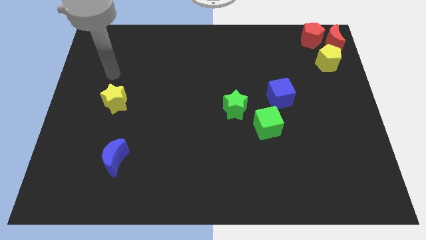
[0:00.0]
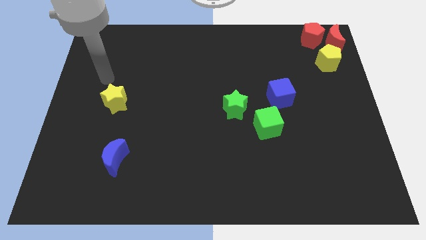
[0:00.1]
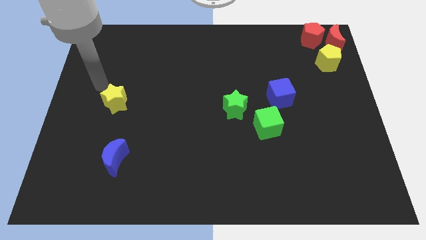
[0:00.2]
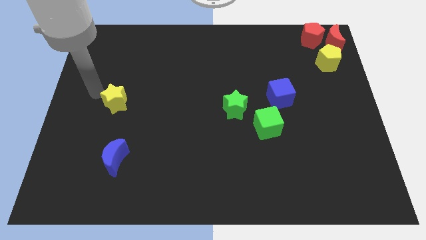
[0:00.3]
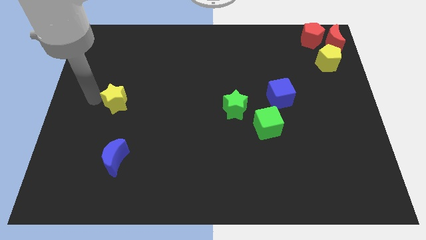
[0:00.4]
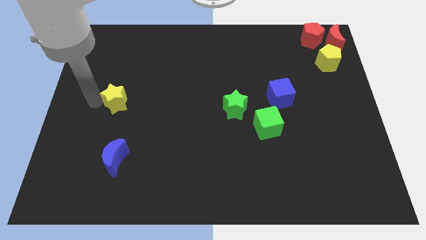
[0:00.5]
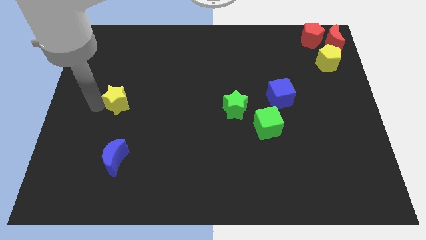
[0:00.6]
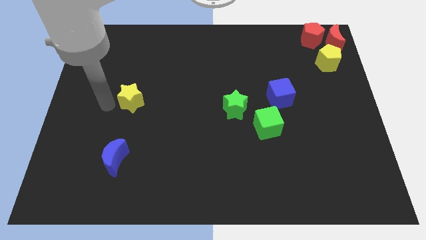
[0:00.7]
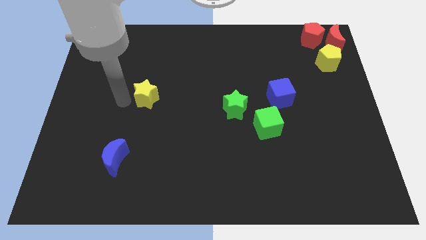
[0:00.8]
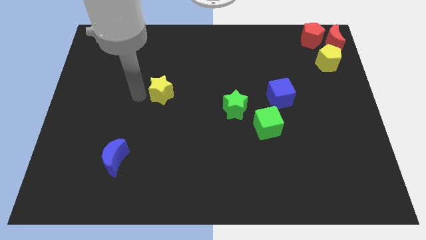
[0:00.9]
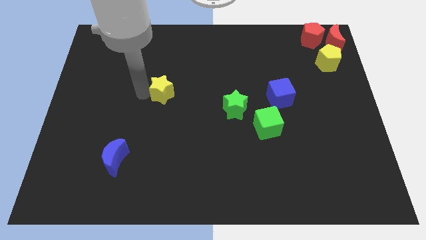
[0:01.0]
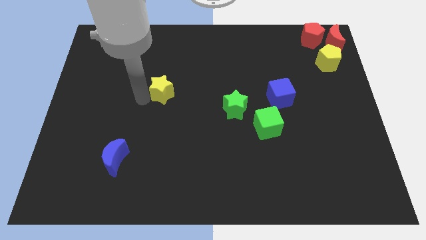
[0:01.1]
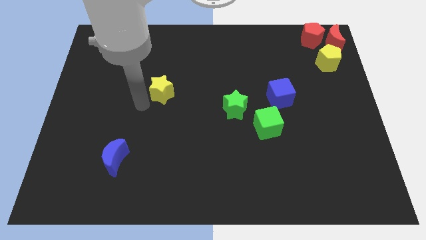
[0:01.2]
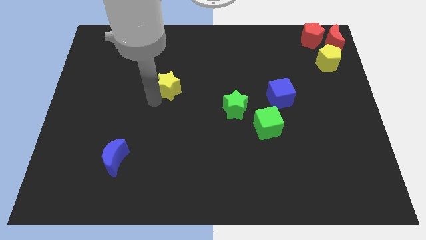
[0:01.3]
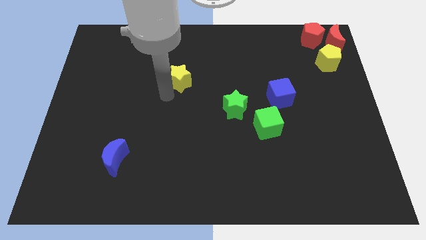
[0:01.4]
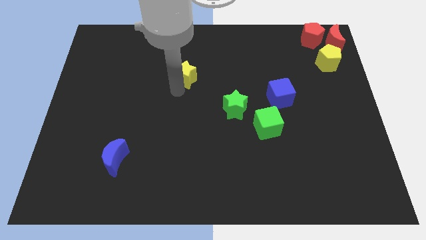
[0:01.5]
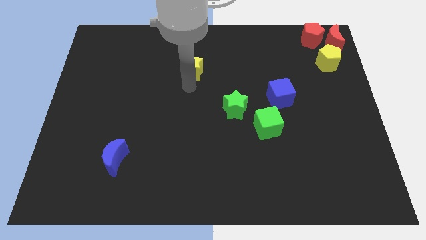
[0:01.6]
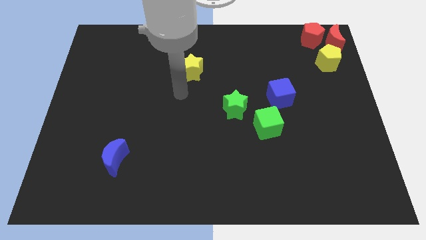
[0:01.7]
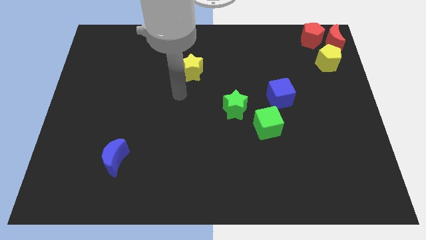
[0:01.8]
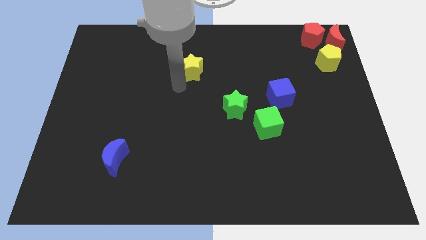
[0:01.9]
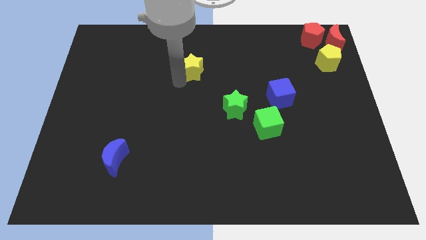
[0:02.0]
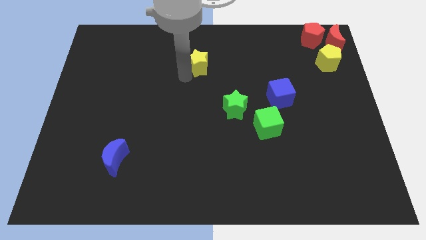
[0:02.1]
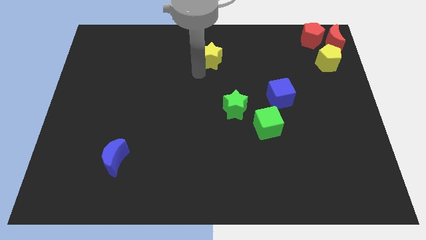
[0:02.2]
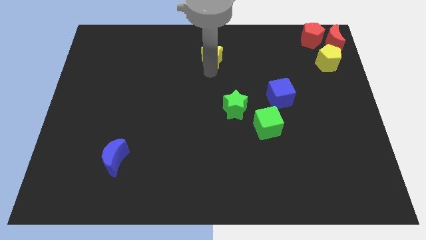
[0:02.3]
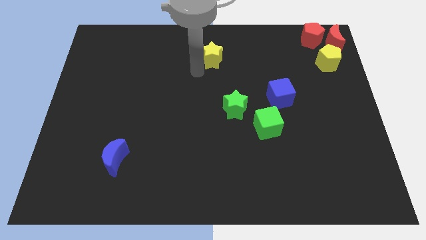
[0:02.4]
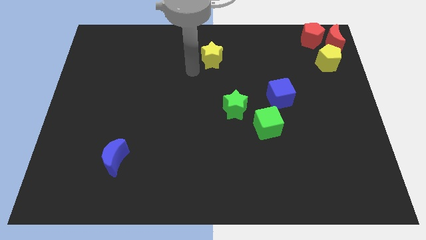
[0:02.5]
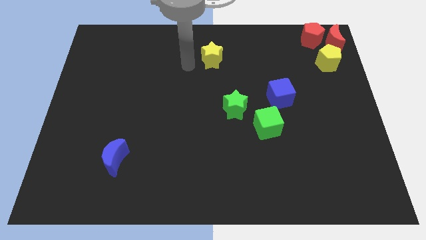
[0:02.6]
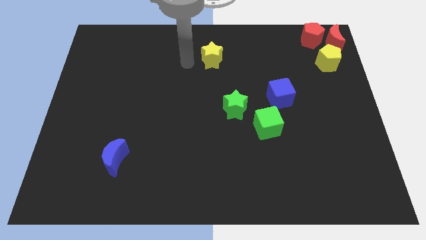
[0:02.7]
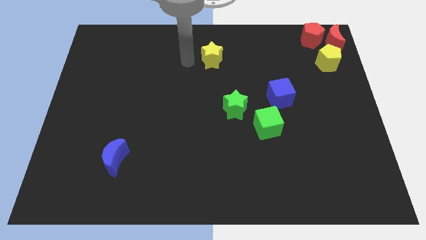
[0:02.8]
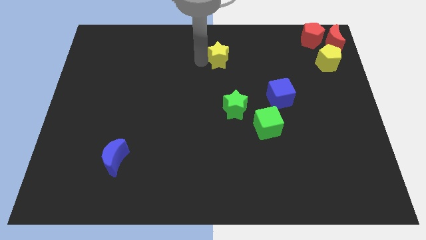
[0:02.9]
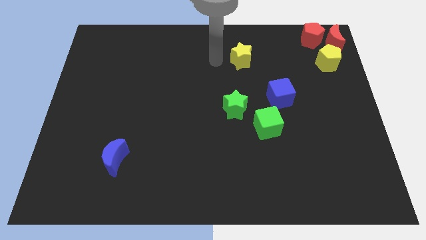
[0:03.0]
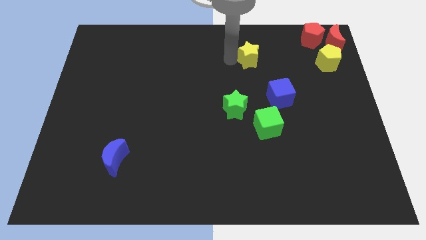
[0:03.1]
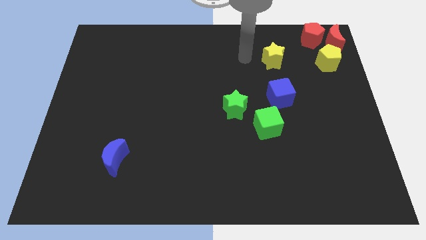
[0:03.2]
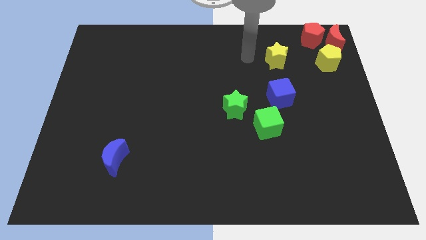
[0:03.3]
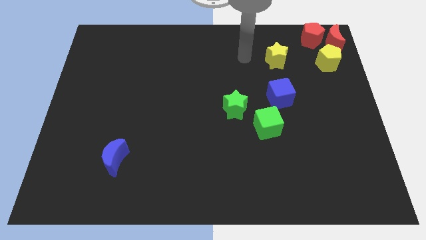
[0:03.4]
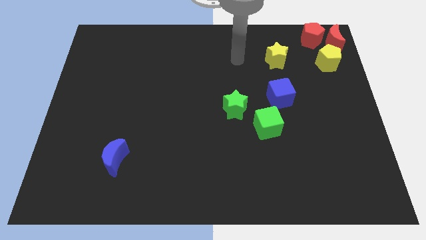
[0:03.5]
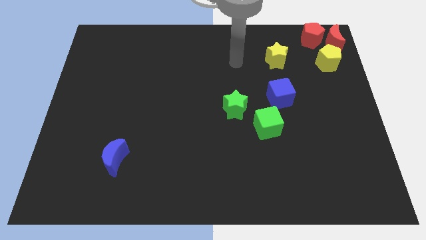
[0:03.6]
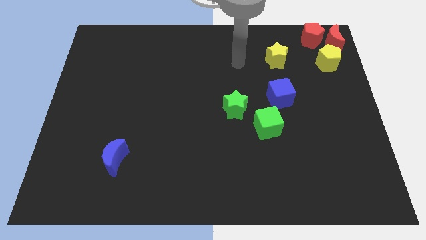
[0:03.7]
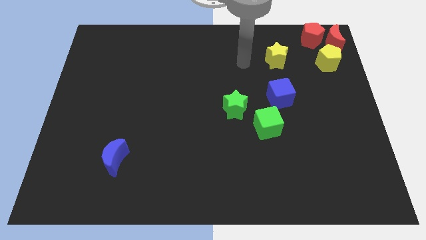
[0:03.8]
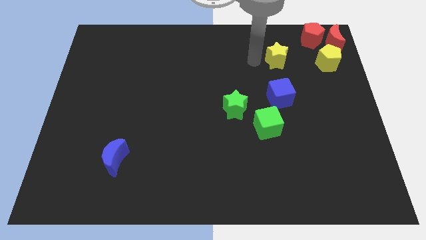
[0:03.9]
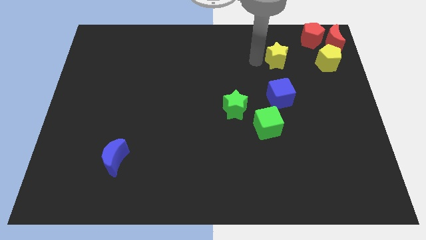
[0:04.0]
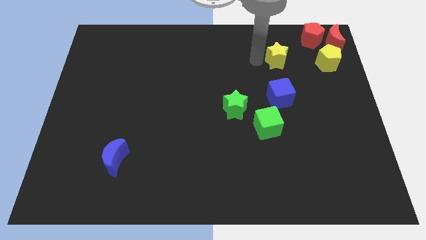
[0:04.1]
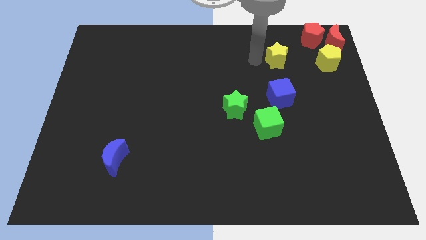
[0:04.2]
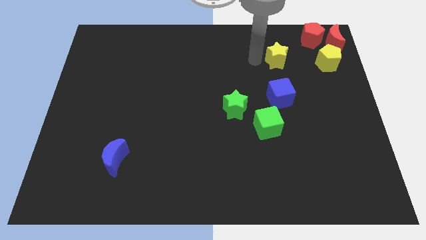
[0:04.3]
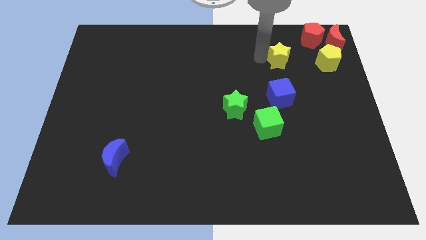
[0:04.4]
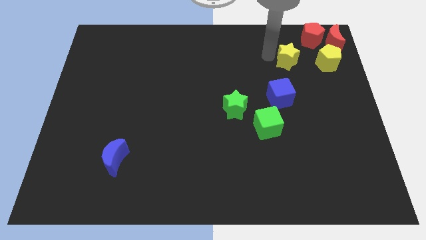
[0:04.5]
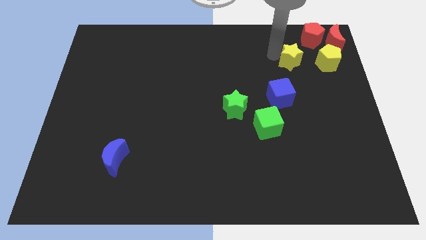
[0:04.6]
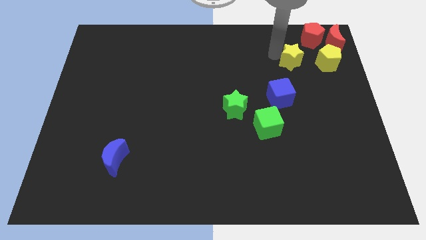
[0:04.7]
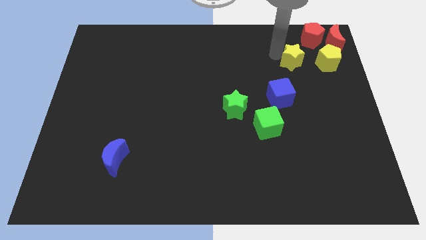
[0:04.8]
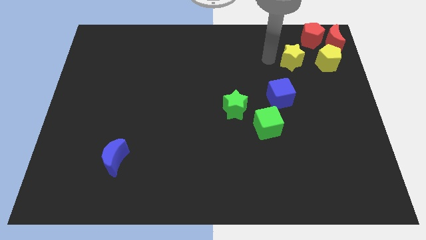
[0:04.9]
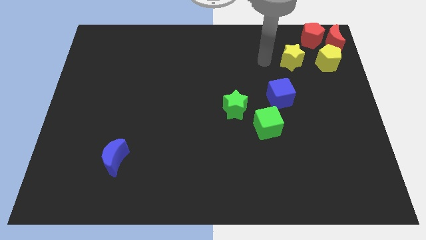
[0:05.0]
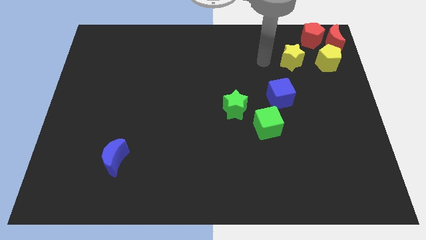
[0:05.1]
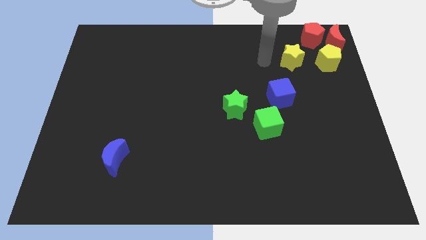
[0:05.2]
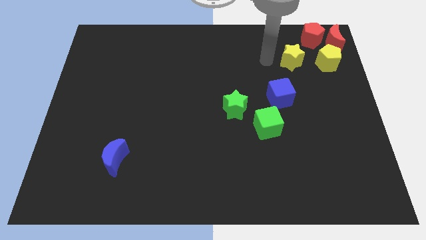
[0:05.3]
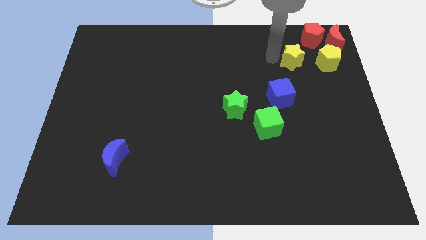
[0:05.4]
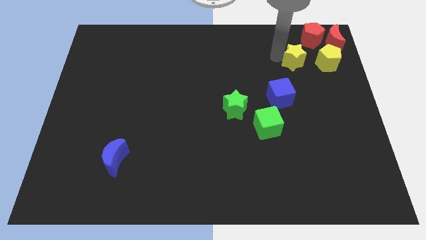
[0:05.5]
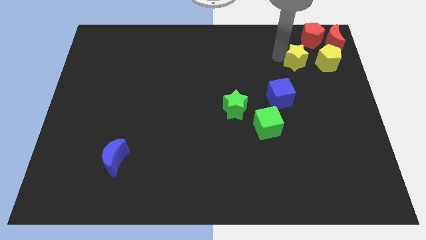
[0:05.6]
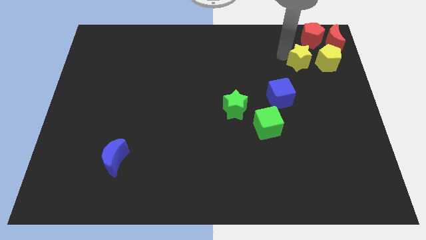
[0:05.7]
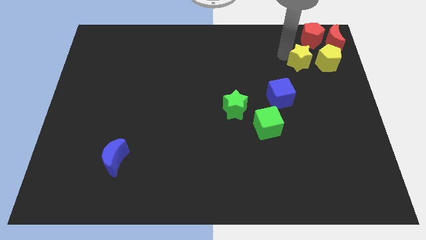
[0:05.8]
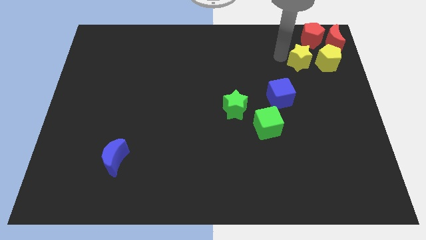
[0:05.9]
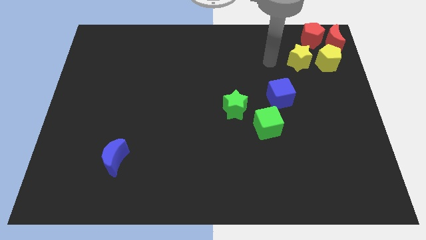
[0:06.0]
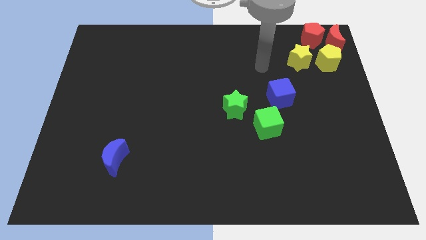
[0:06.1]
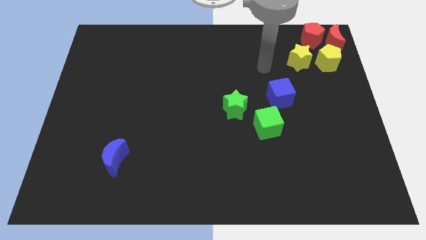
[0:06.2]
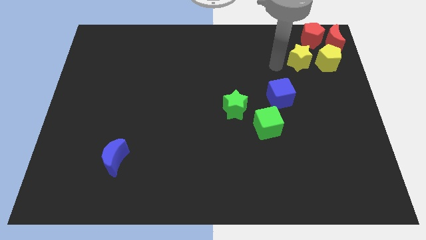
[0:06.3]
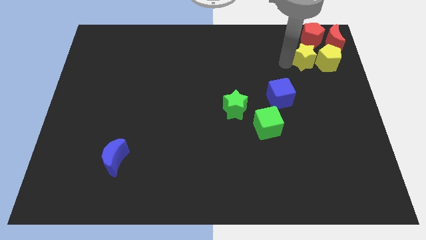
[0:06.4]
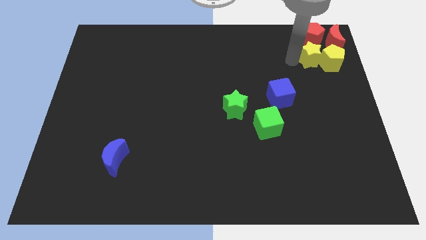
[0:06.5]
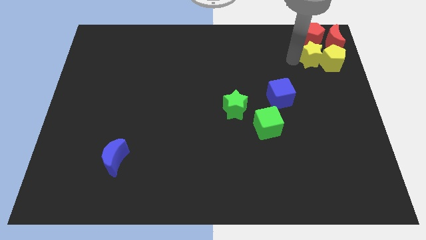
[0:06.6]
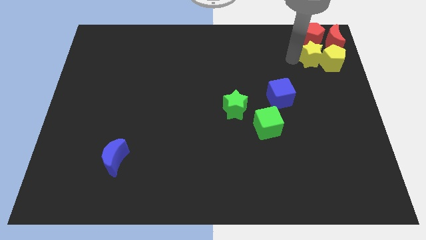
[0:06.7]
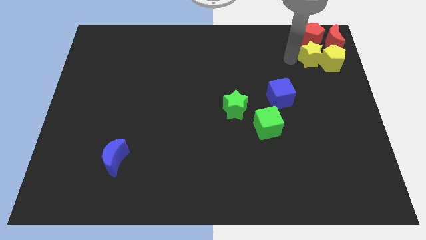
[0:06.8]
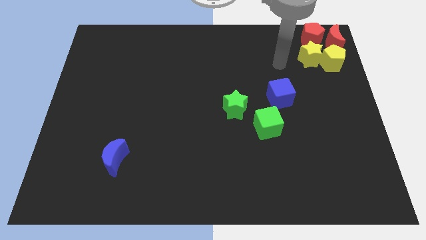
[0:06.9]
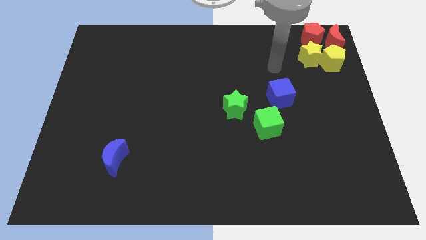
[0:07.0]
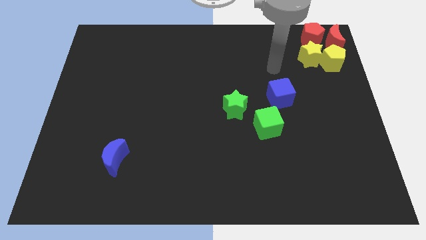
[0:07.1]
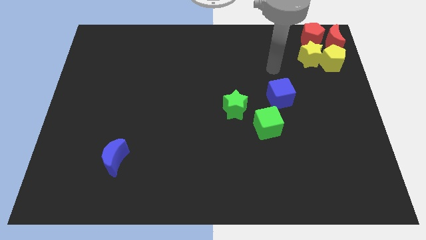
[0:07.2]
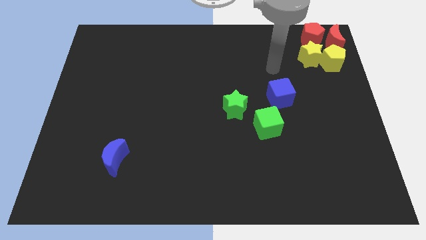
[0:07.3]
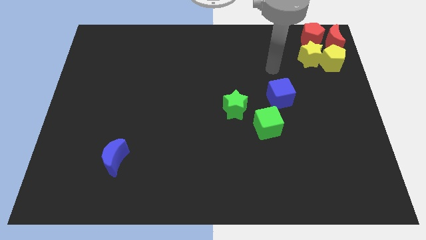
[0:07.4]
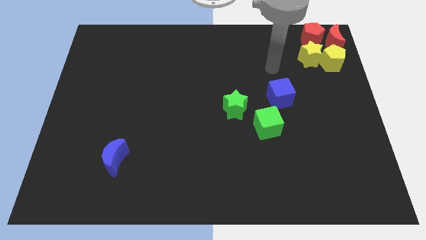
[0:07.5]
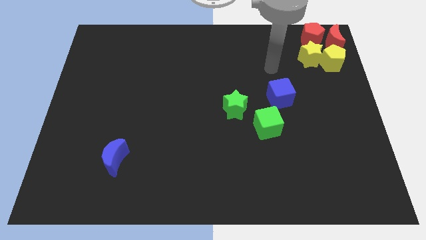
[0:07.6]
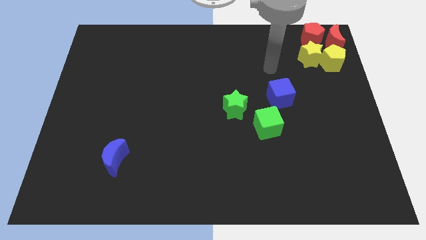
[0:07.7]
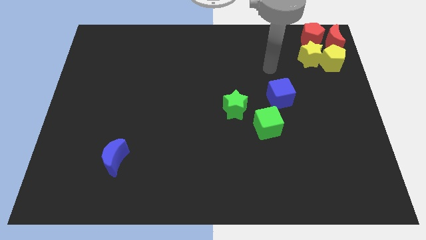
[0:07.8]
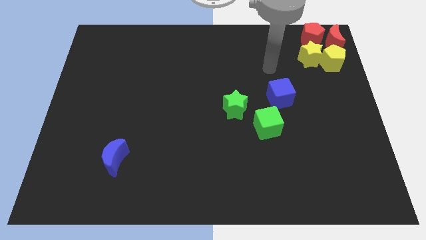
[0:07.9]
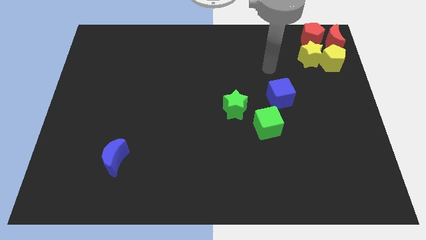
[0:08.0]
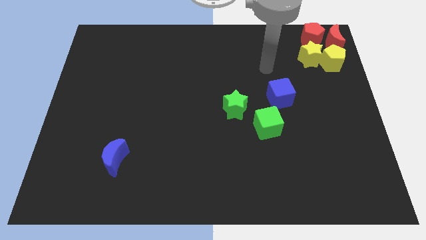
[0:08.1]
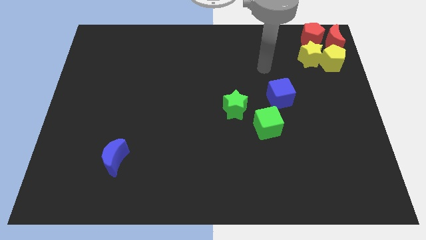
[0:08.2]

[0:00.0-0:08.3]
move the yellow star below the red pentagon

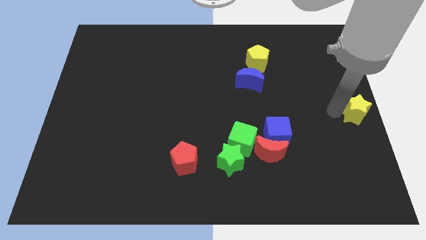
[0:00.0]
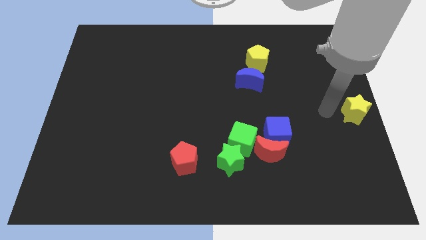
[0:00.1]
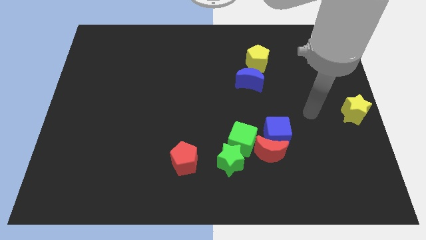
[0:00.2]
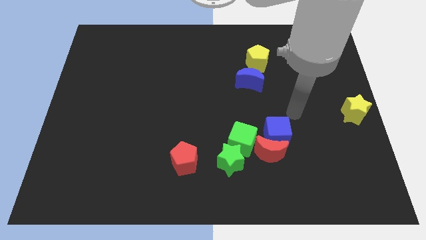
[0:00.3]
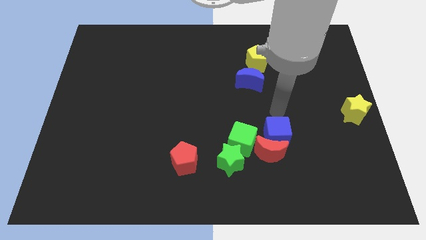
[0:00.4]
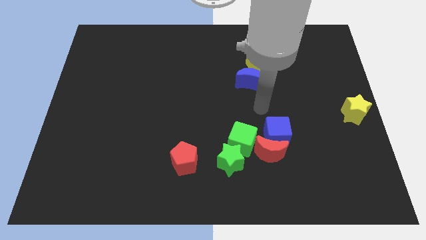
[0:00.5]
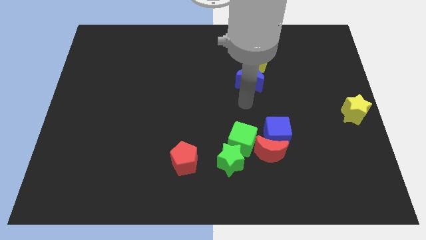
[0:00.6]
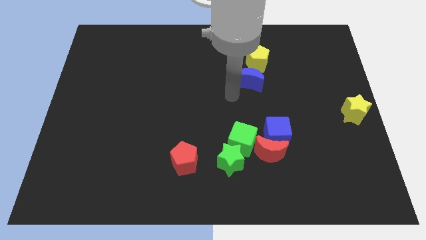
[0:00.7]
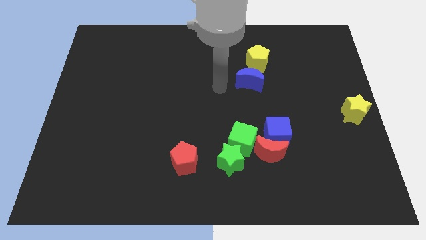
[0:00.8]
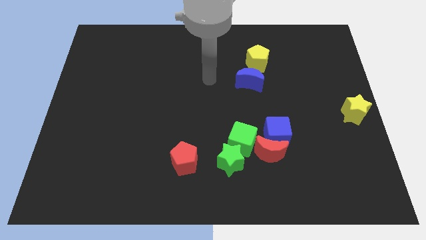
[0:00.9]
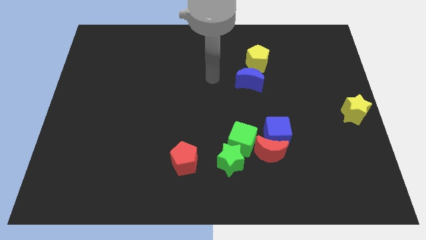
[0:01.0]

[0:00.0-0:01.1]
move the arm away from the yellow star
